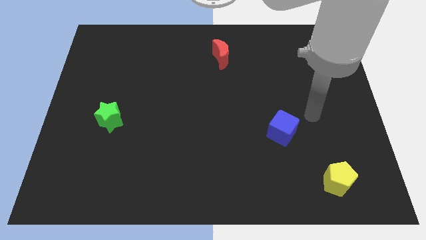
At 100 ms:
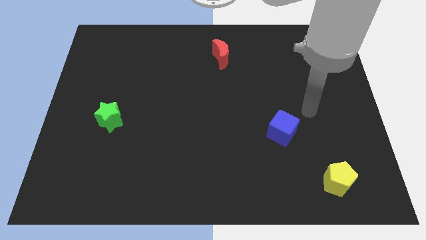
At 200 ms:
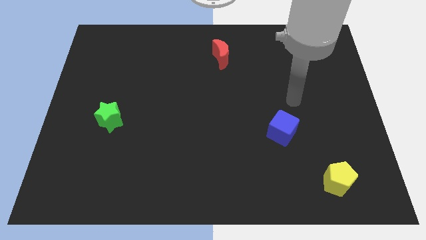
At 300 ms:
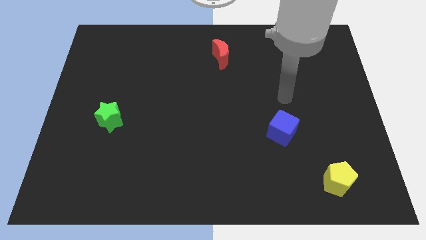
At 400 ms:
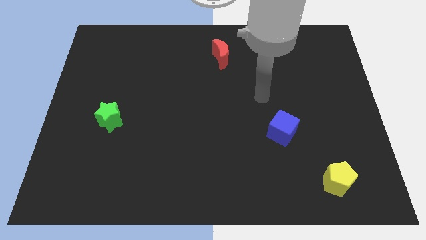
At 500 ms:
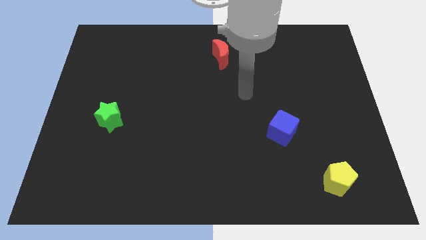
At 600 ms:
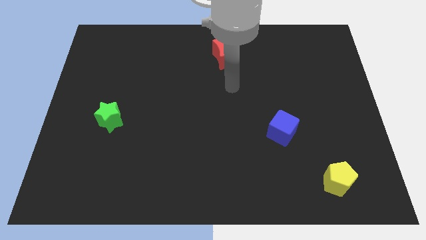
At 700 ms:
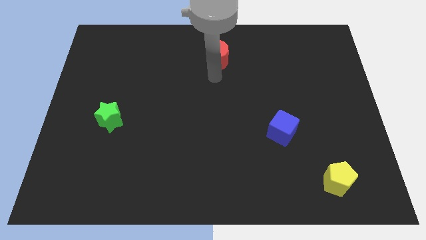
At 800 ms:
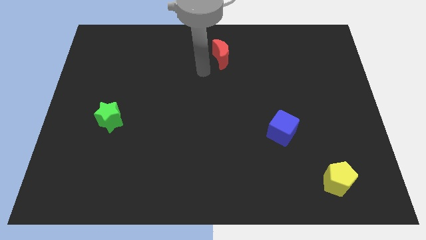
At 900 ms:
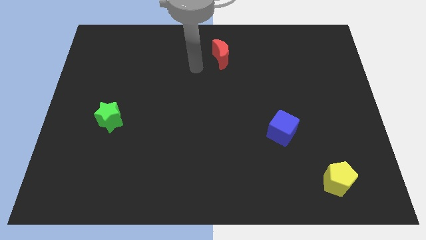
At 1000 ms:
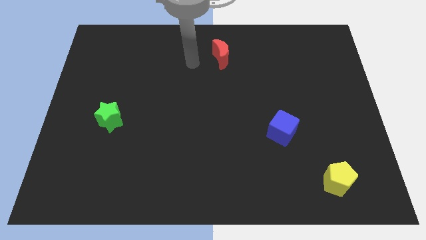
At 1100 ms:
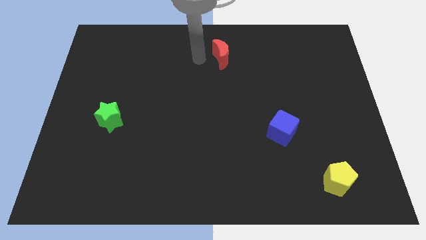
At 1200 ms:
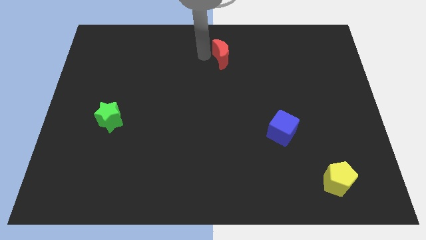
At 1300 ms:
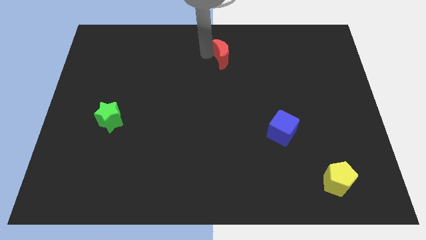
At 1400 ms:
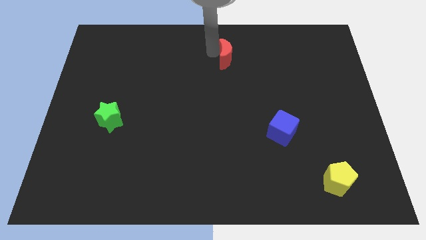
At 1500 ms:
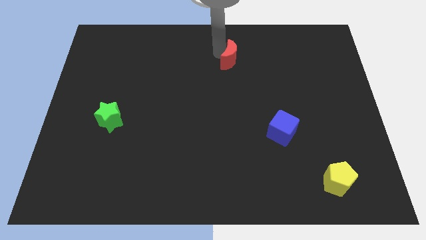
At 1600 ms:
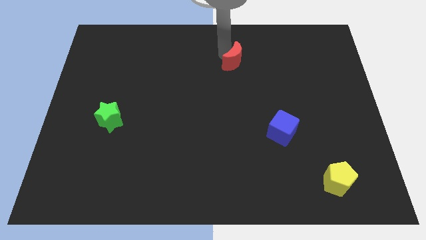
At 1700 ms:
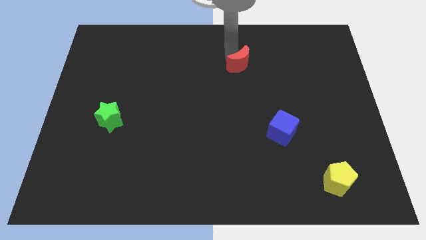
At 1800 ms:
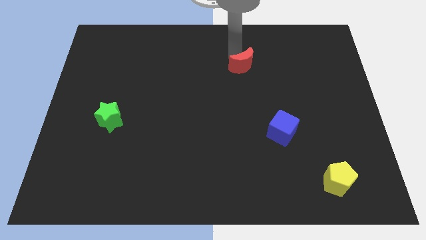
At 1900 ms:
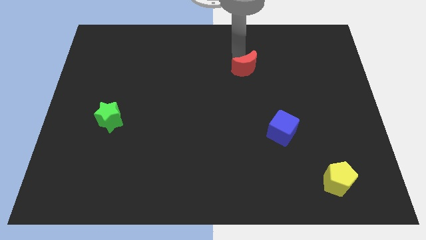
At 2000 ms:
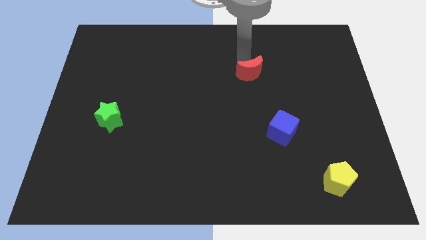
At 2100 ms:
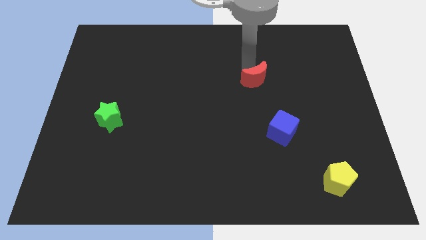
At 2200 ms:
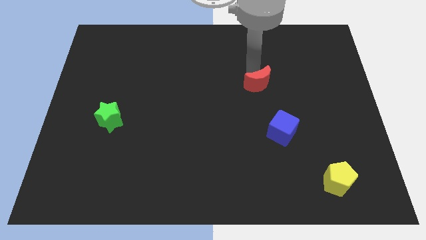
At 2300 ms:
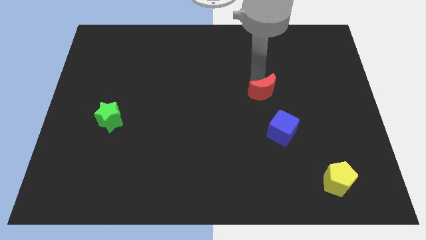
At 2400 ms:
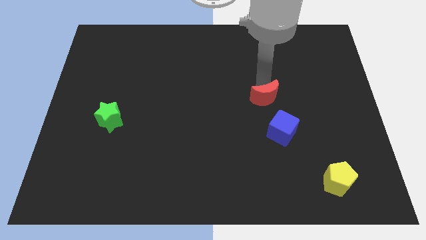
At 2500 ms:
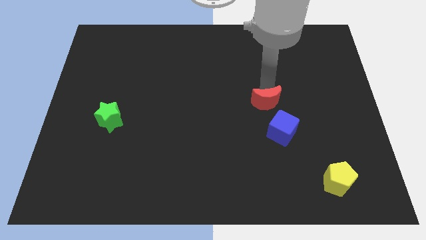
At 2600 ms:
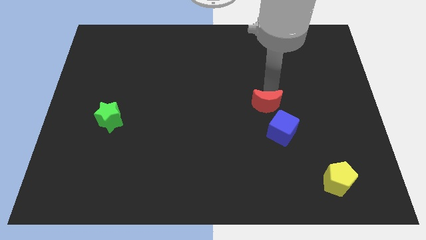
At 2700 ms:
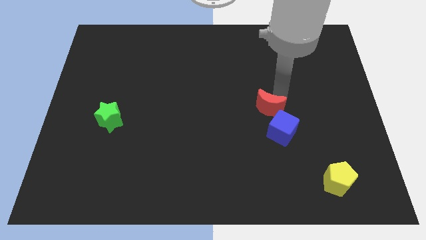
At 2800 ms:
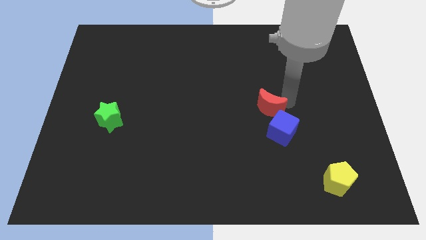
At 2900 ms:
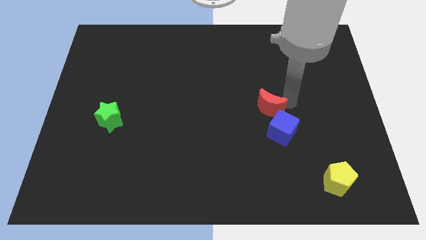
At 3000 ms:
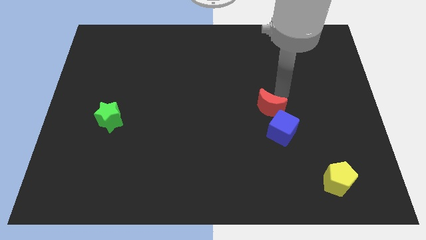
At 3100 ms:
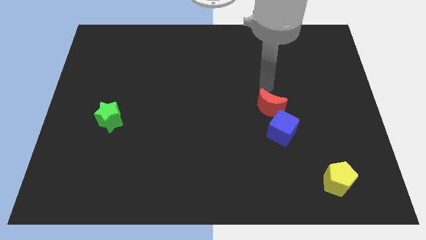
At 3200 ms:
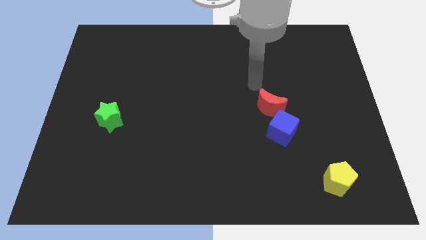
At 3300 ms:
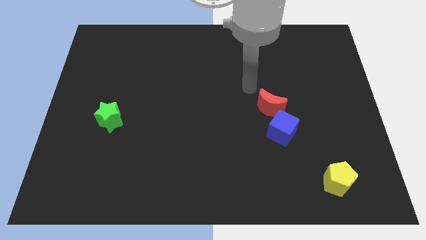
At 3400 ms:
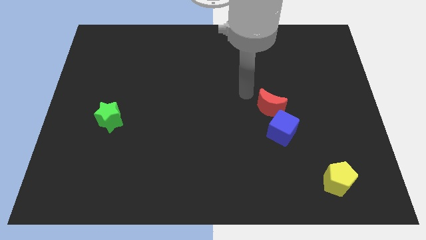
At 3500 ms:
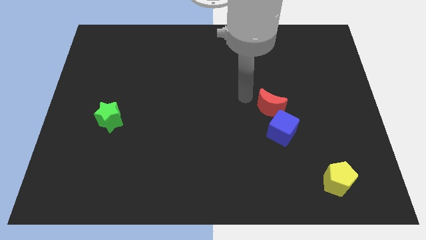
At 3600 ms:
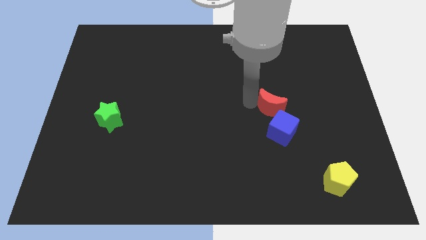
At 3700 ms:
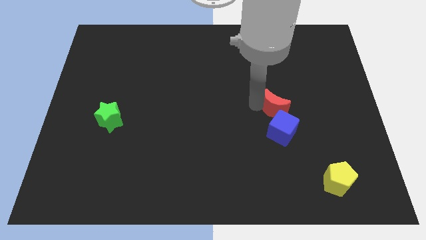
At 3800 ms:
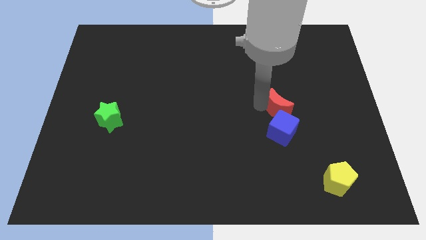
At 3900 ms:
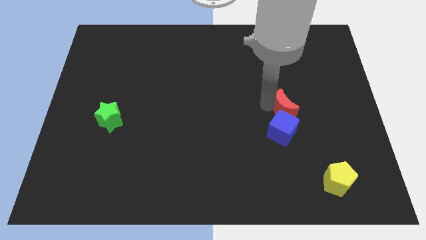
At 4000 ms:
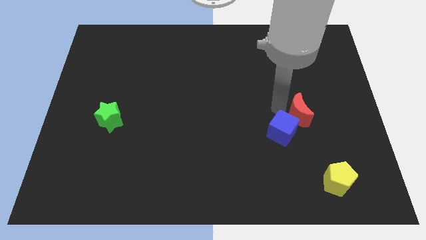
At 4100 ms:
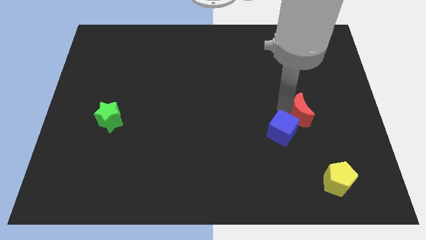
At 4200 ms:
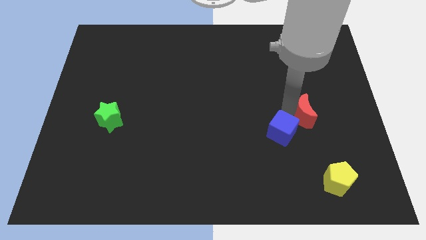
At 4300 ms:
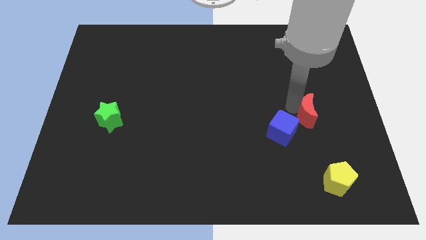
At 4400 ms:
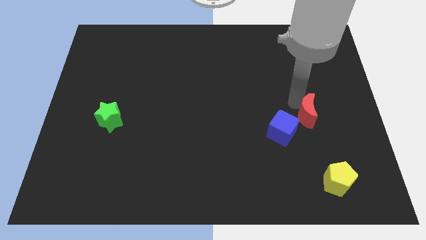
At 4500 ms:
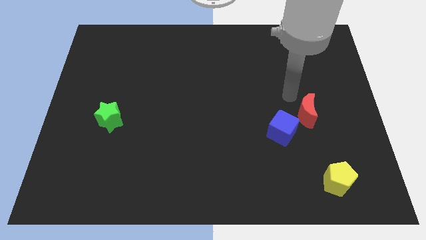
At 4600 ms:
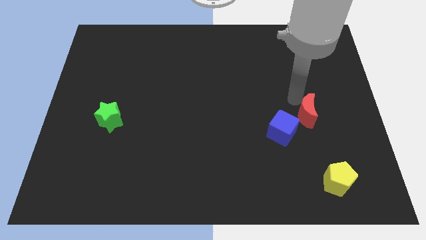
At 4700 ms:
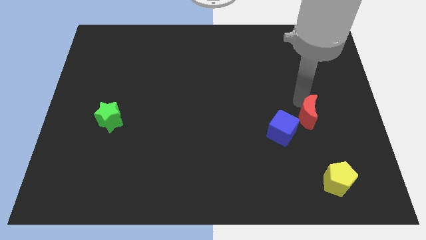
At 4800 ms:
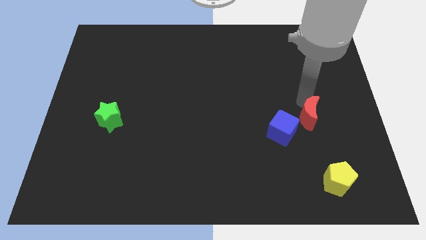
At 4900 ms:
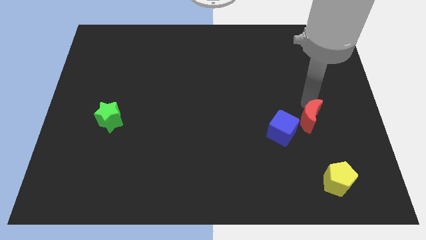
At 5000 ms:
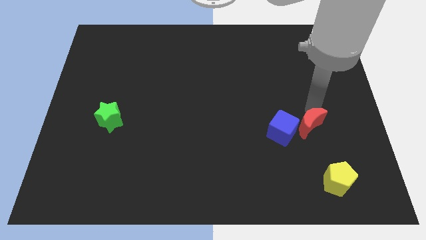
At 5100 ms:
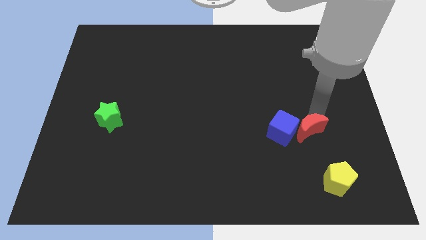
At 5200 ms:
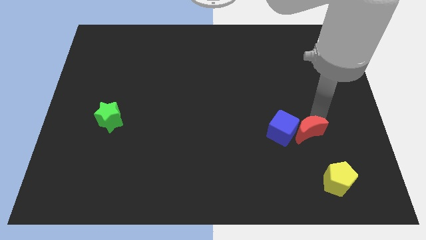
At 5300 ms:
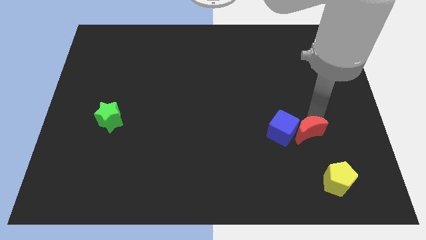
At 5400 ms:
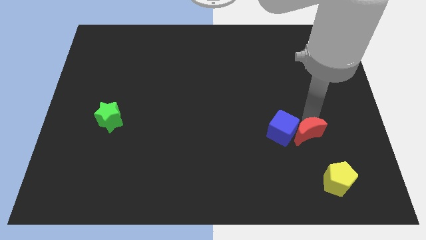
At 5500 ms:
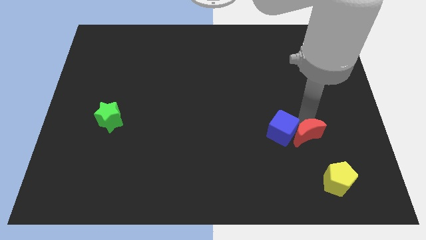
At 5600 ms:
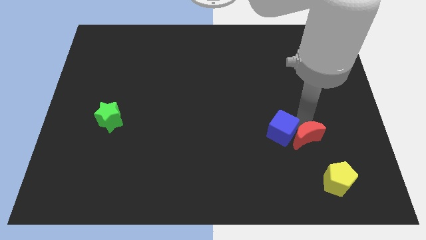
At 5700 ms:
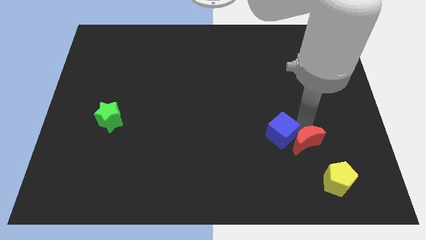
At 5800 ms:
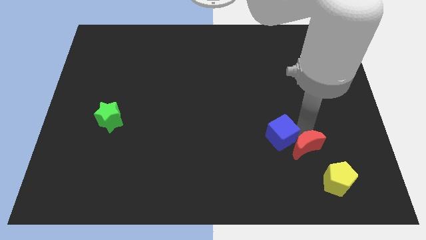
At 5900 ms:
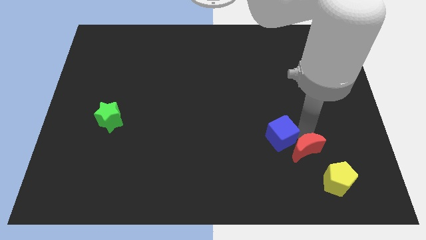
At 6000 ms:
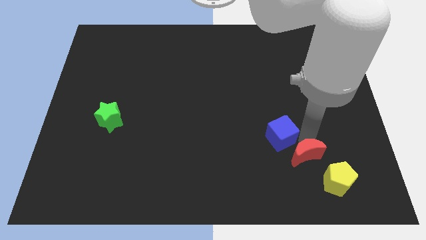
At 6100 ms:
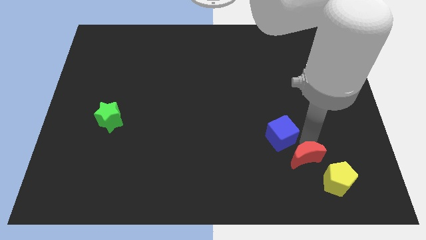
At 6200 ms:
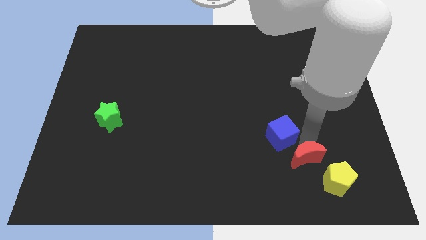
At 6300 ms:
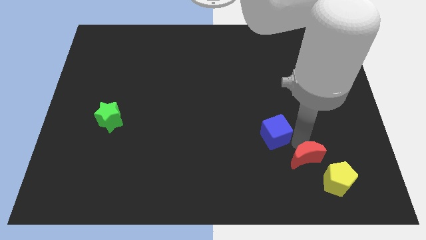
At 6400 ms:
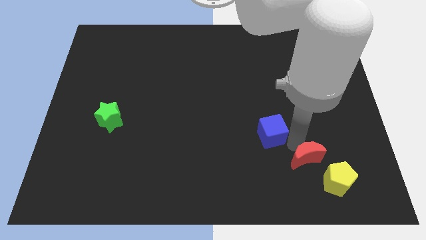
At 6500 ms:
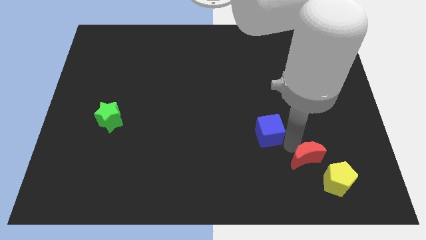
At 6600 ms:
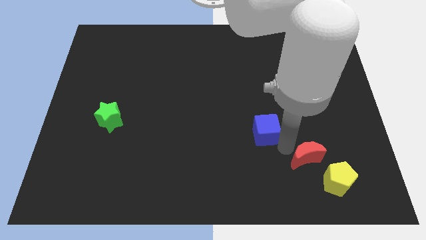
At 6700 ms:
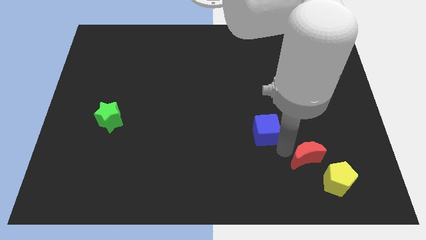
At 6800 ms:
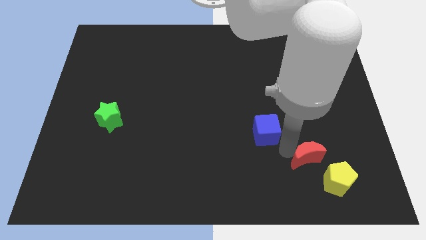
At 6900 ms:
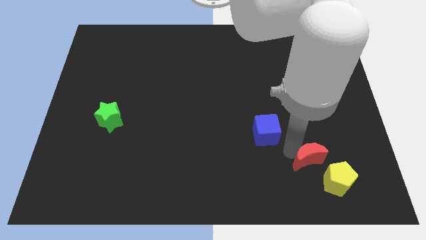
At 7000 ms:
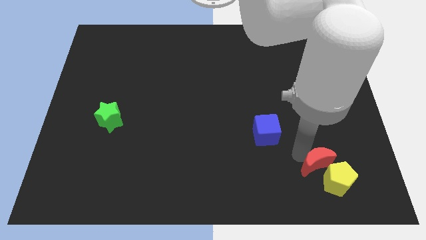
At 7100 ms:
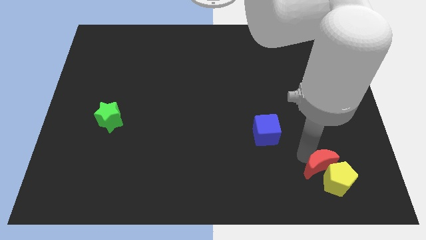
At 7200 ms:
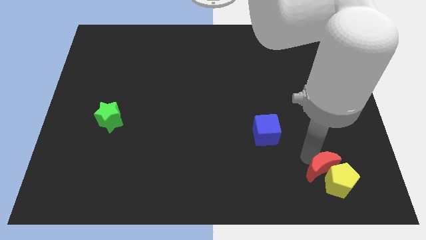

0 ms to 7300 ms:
slide the red moon close to the yellow pentagon

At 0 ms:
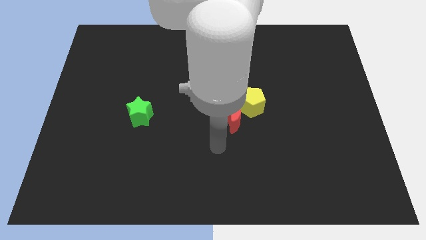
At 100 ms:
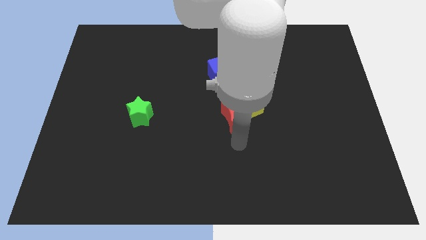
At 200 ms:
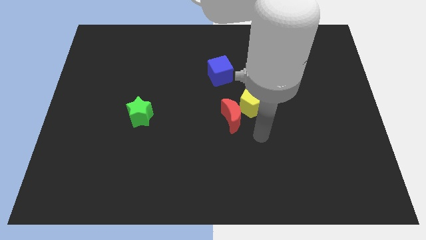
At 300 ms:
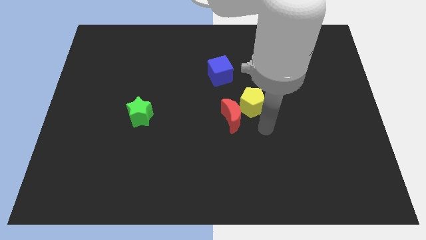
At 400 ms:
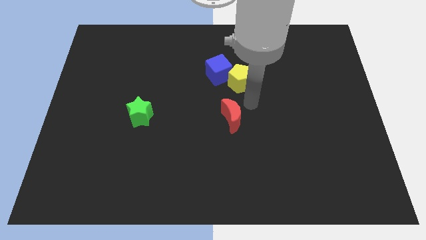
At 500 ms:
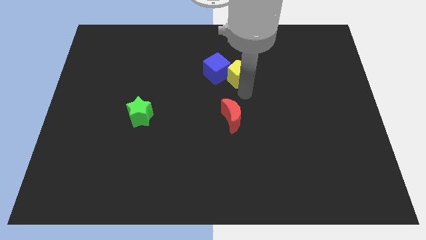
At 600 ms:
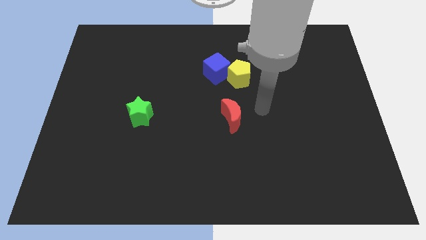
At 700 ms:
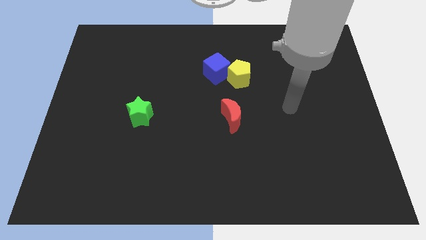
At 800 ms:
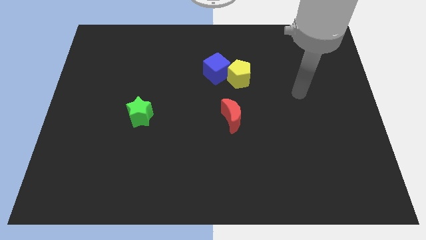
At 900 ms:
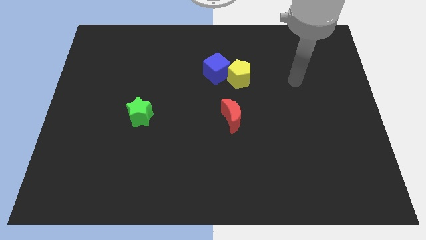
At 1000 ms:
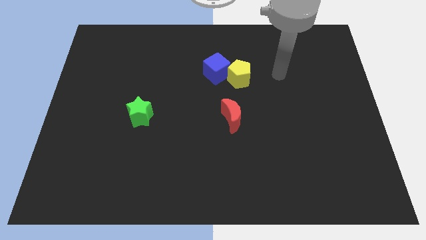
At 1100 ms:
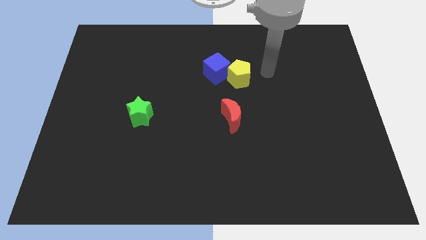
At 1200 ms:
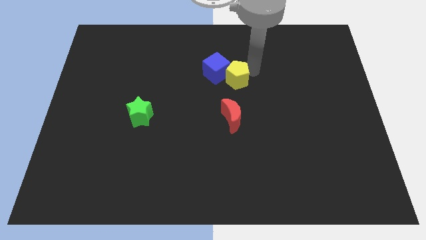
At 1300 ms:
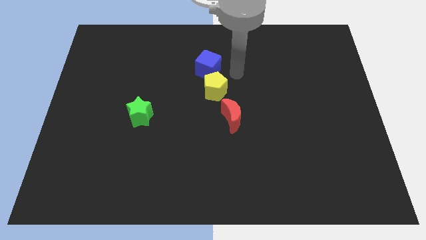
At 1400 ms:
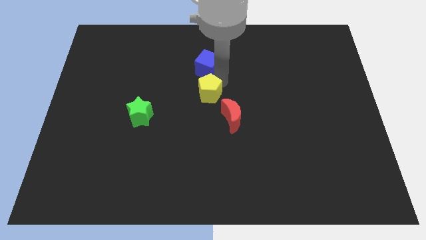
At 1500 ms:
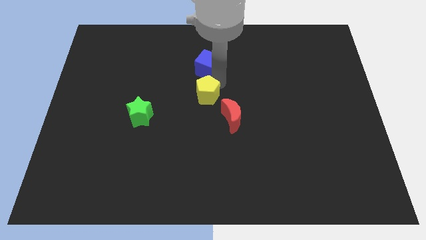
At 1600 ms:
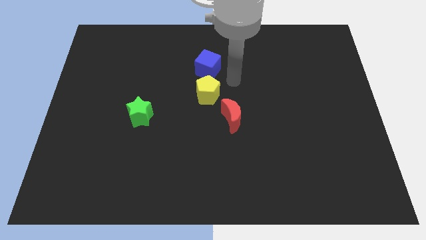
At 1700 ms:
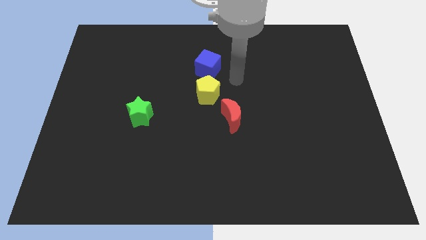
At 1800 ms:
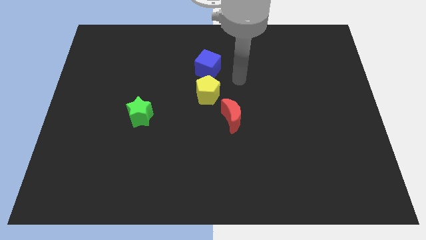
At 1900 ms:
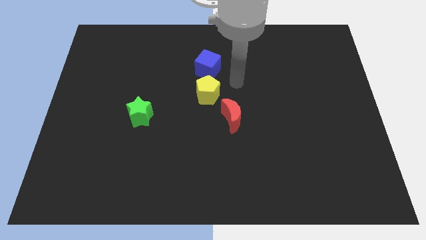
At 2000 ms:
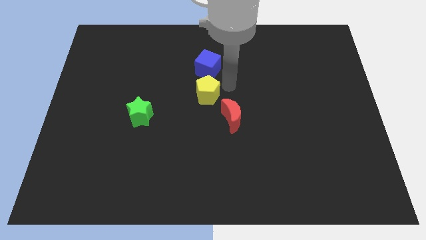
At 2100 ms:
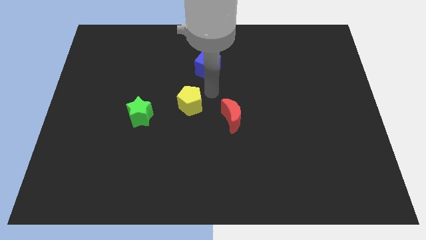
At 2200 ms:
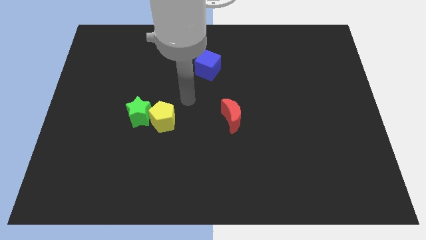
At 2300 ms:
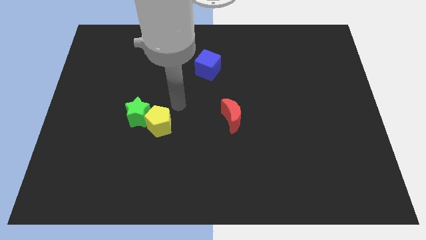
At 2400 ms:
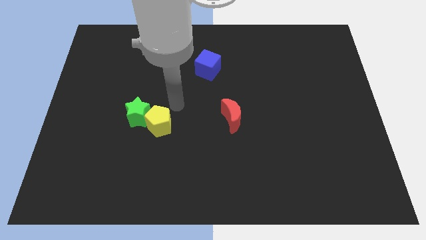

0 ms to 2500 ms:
slide the yellow pentagon next to the star
